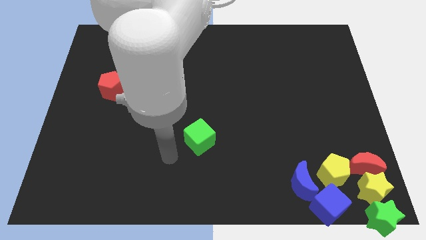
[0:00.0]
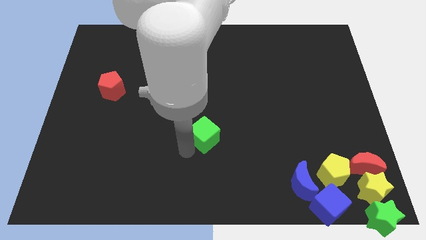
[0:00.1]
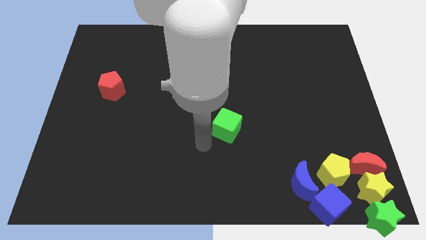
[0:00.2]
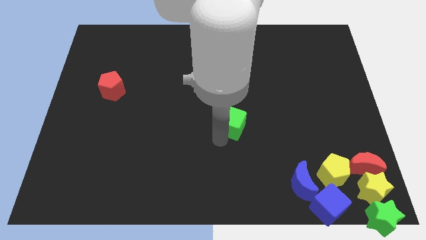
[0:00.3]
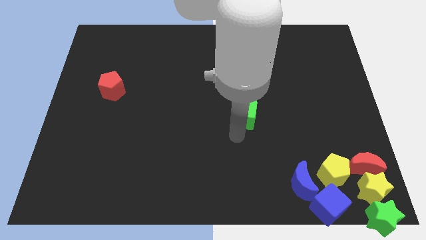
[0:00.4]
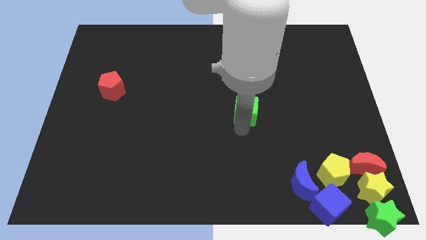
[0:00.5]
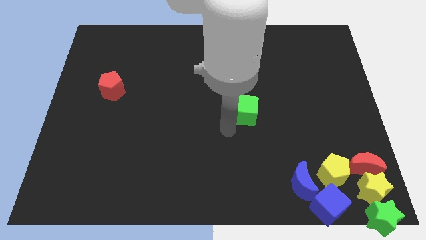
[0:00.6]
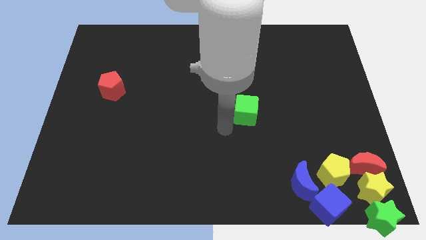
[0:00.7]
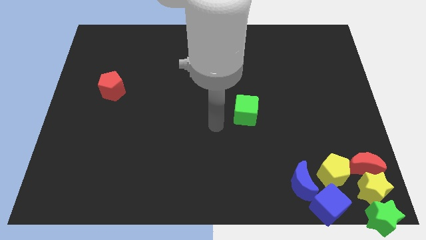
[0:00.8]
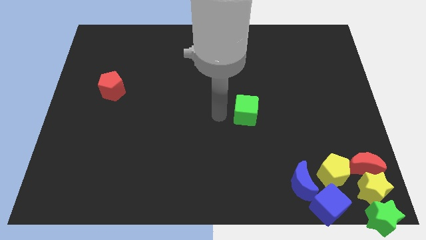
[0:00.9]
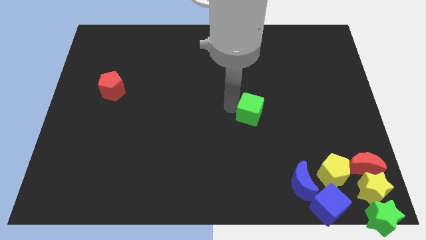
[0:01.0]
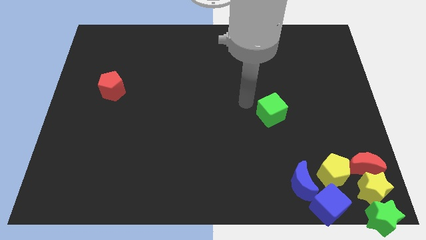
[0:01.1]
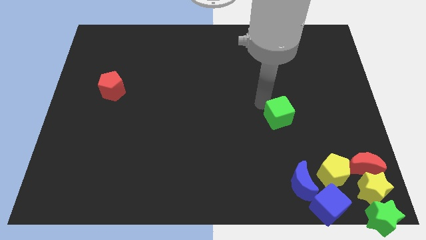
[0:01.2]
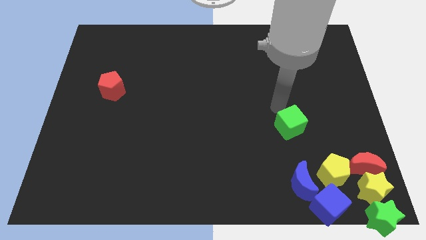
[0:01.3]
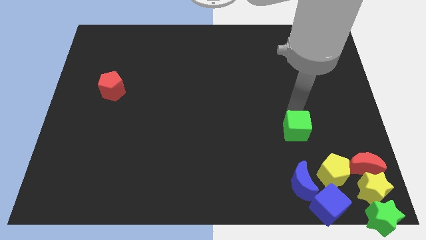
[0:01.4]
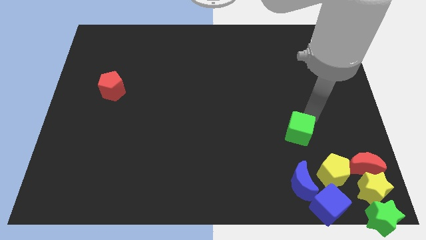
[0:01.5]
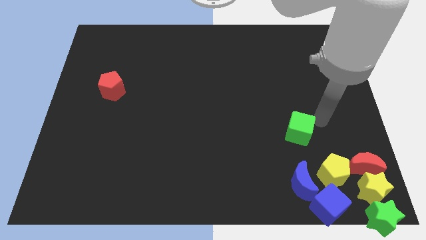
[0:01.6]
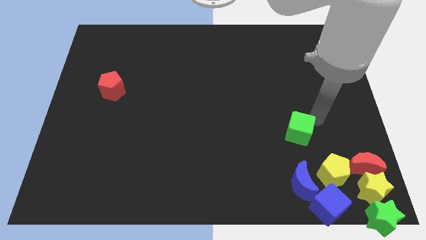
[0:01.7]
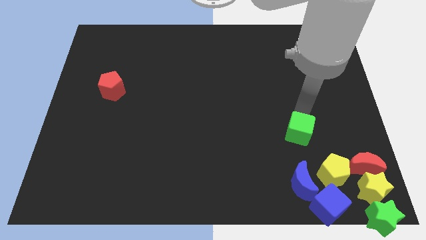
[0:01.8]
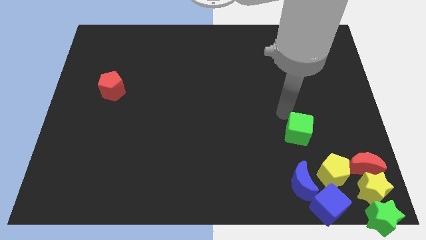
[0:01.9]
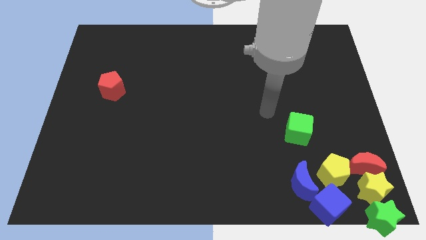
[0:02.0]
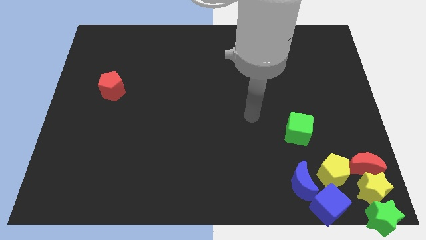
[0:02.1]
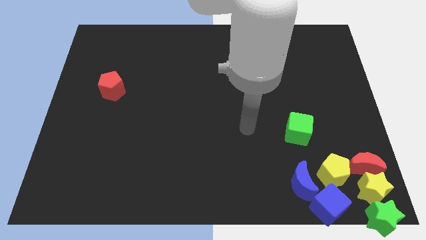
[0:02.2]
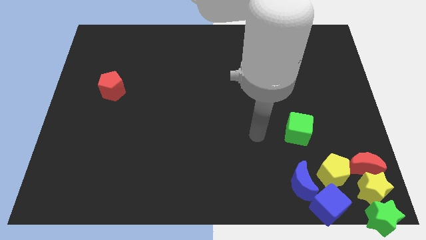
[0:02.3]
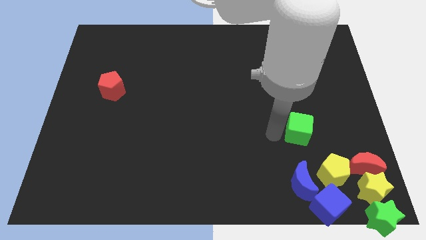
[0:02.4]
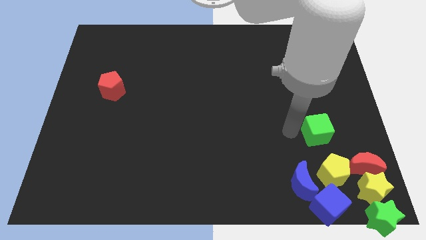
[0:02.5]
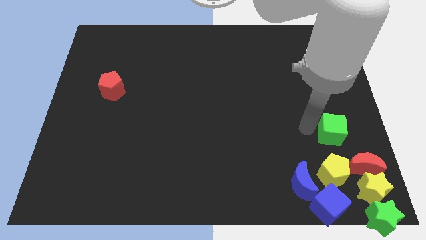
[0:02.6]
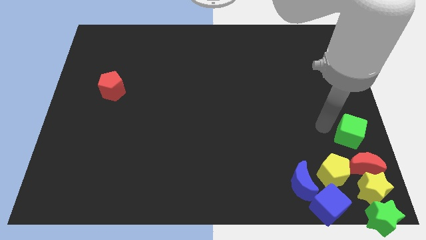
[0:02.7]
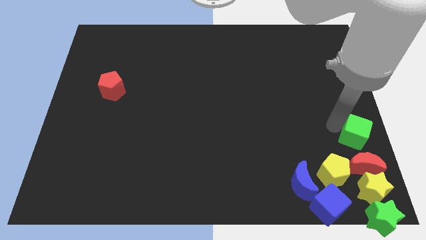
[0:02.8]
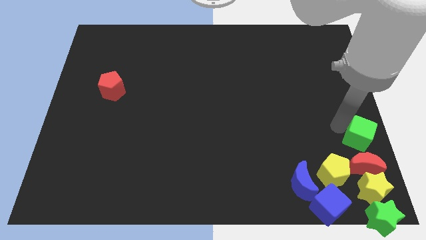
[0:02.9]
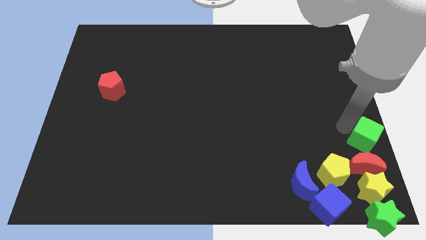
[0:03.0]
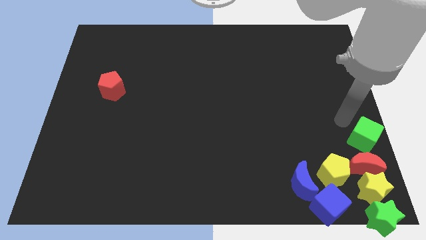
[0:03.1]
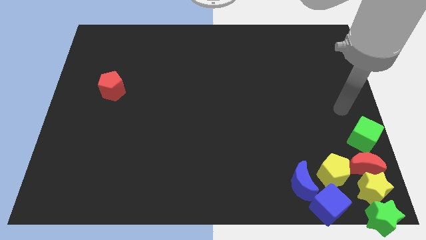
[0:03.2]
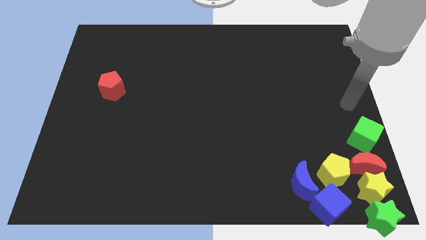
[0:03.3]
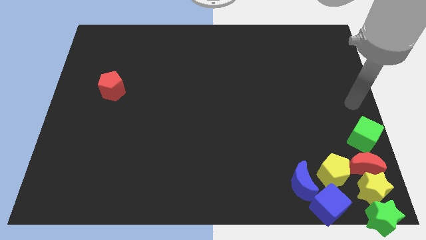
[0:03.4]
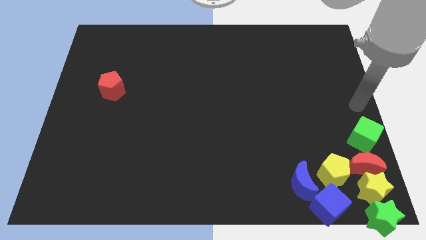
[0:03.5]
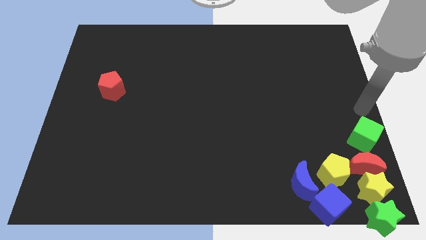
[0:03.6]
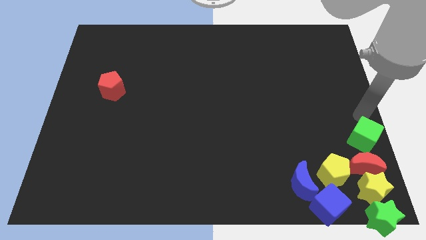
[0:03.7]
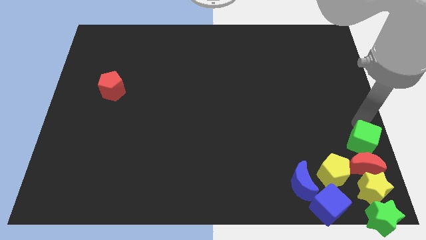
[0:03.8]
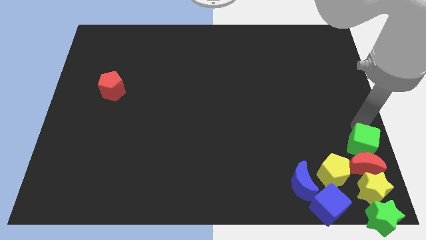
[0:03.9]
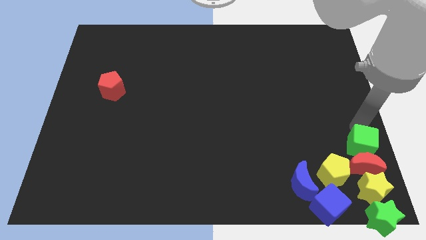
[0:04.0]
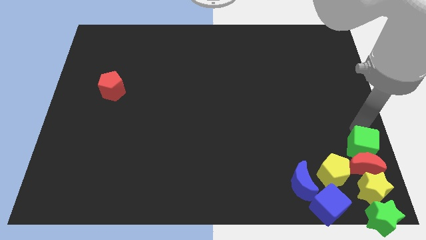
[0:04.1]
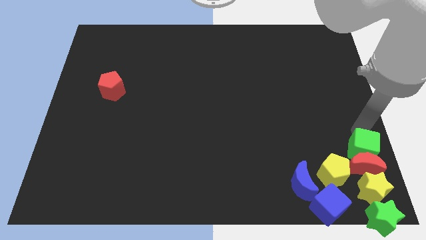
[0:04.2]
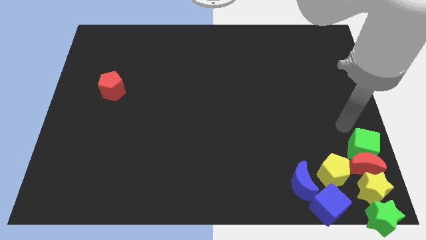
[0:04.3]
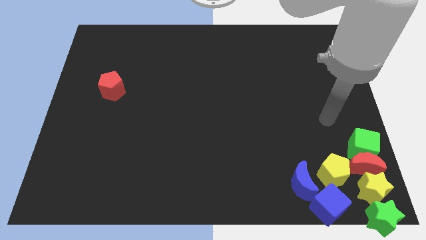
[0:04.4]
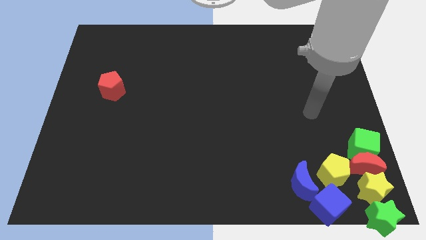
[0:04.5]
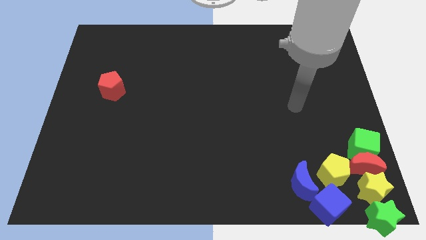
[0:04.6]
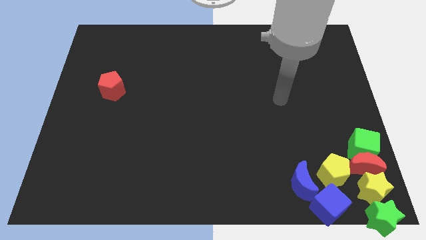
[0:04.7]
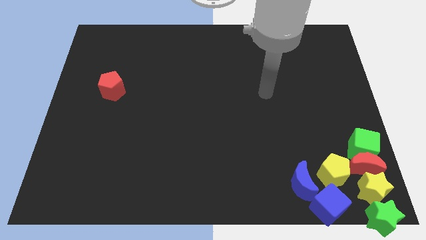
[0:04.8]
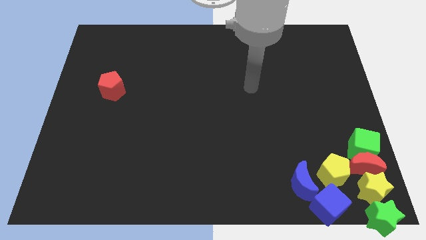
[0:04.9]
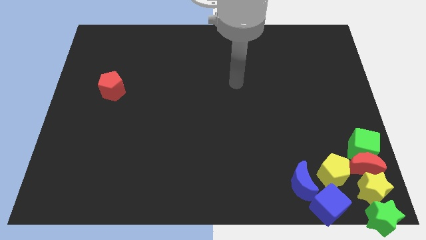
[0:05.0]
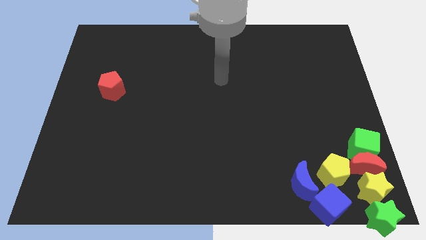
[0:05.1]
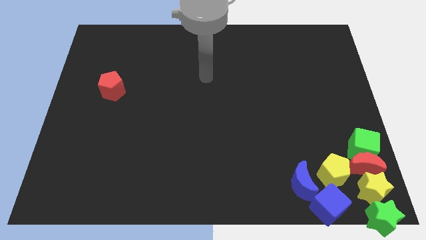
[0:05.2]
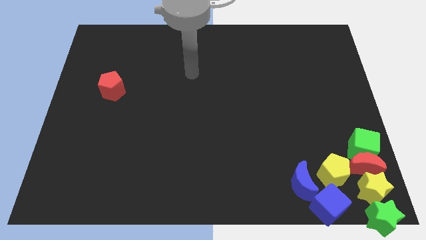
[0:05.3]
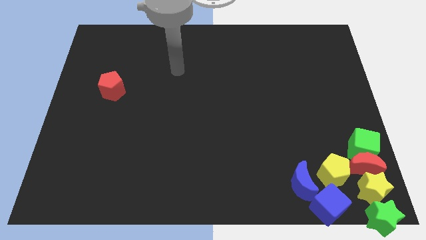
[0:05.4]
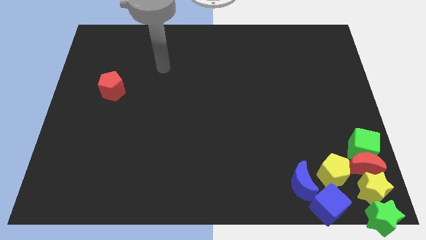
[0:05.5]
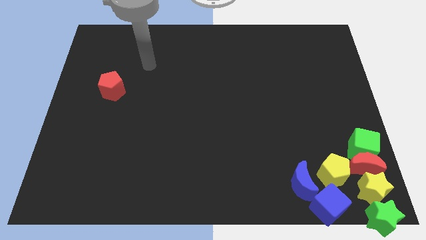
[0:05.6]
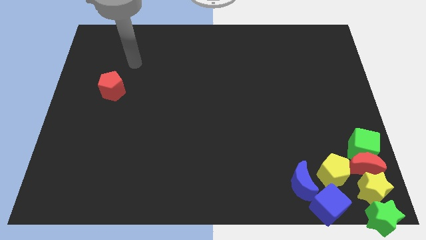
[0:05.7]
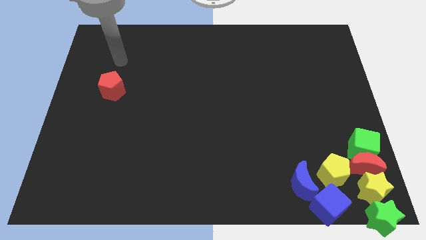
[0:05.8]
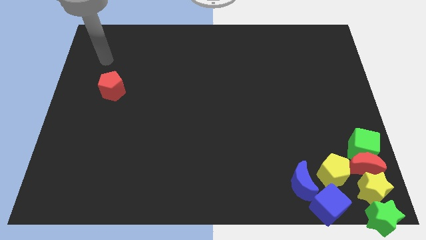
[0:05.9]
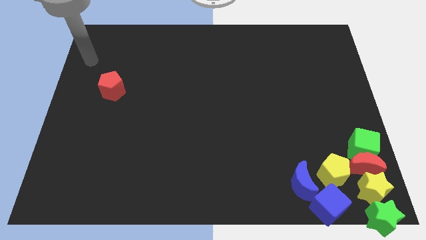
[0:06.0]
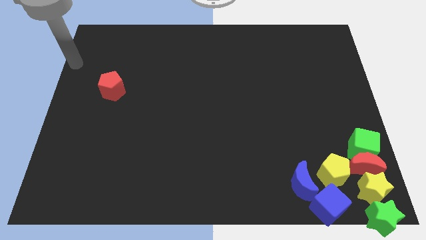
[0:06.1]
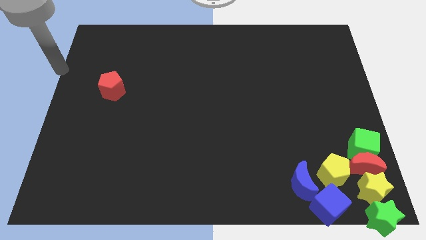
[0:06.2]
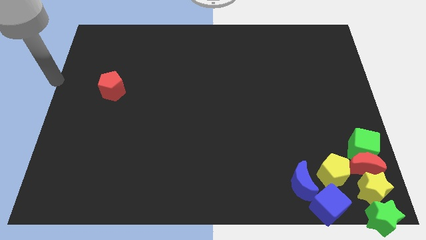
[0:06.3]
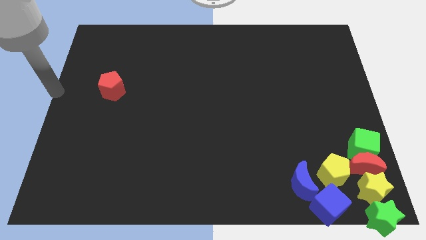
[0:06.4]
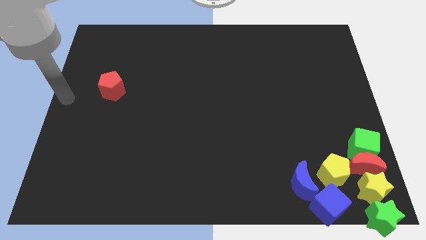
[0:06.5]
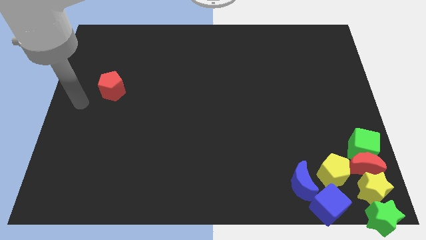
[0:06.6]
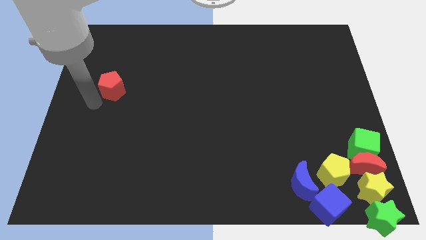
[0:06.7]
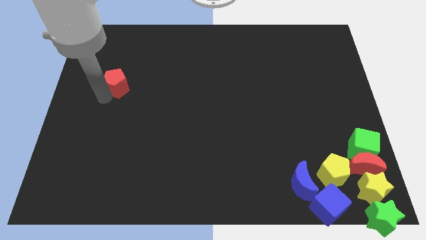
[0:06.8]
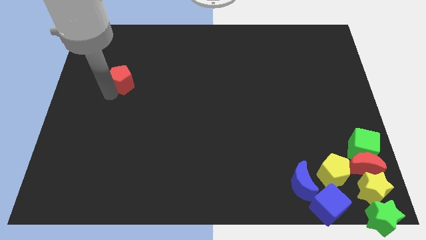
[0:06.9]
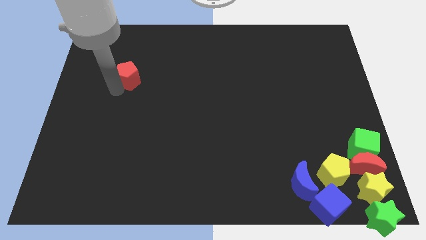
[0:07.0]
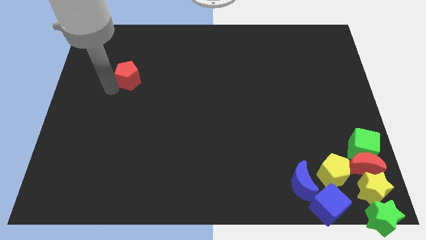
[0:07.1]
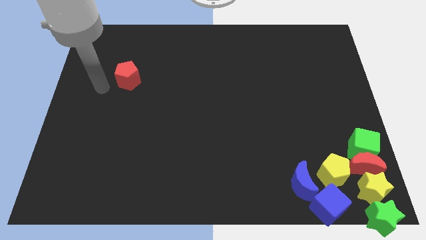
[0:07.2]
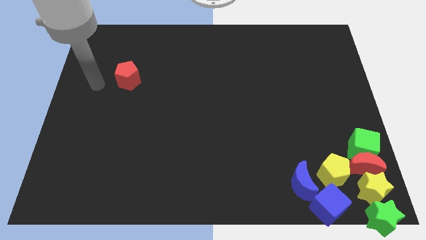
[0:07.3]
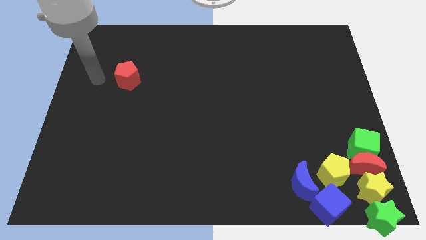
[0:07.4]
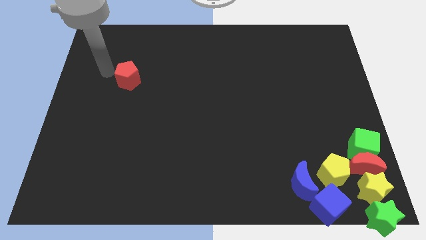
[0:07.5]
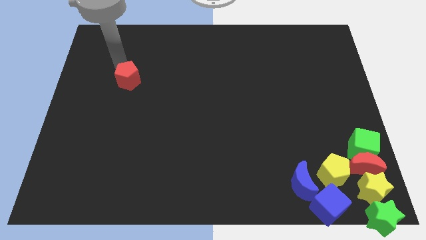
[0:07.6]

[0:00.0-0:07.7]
move the green cube towards the bottom right

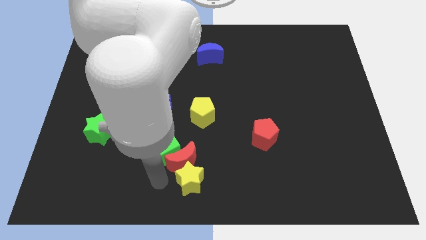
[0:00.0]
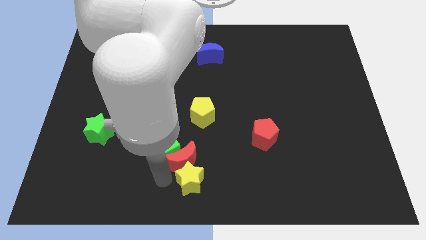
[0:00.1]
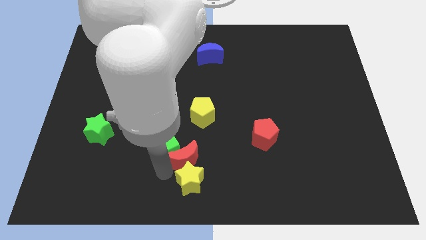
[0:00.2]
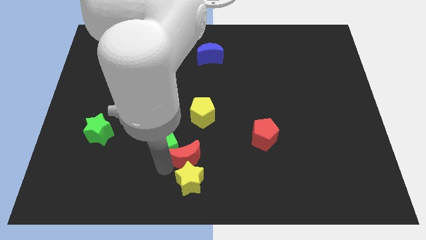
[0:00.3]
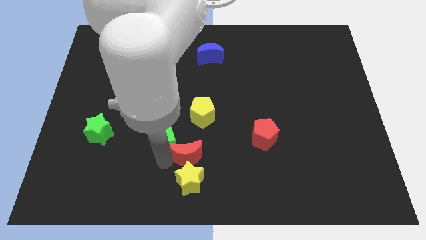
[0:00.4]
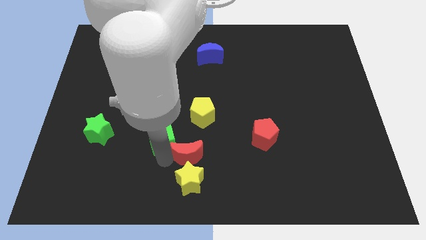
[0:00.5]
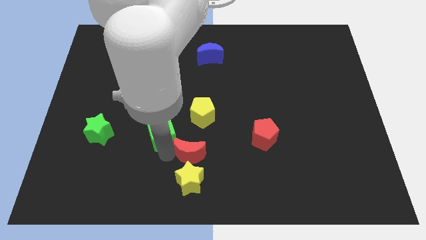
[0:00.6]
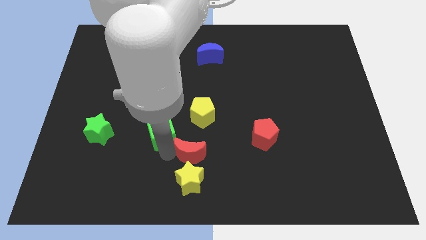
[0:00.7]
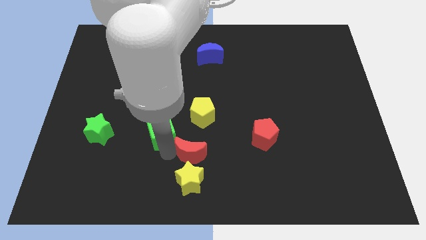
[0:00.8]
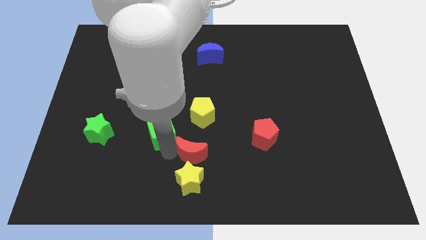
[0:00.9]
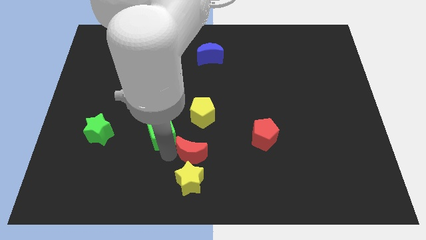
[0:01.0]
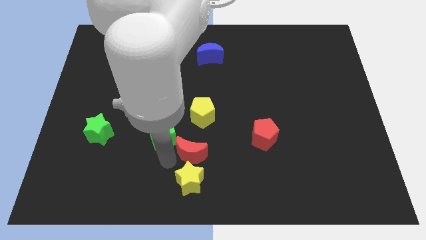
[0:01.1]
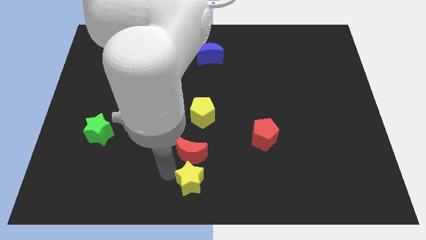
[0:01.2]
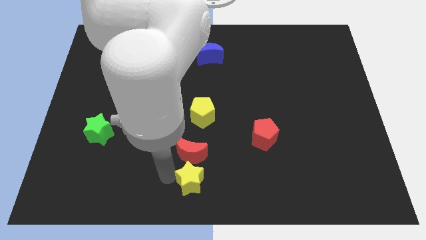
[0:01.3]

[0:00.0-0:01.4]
place the red moon to the top side of the yellow star
